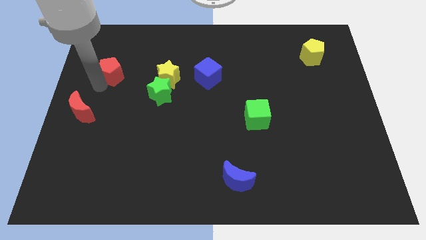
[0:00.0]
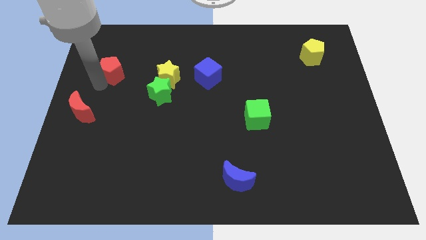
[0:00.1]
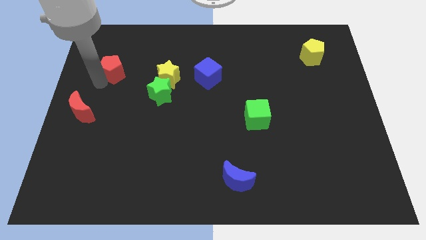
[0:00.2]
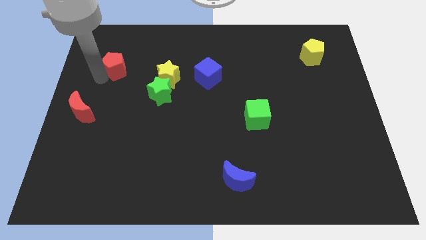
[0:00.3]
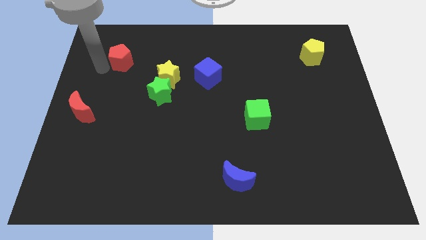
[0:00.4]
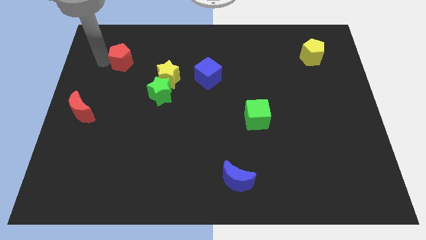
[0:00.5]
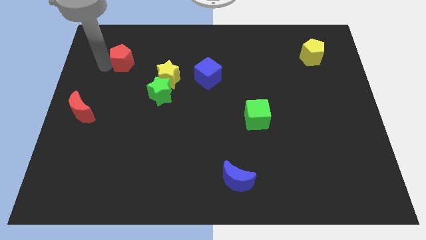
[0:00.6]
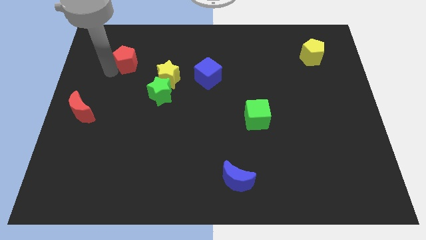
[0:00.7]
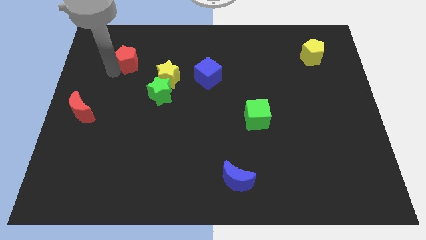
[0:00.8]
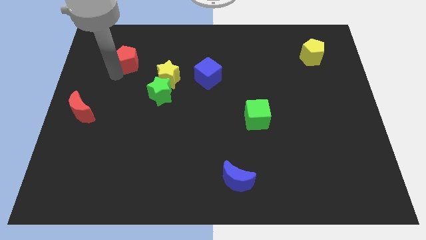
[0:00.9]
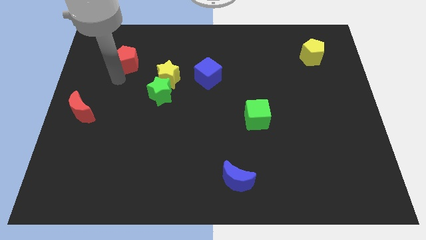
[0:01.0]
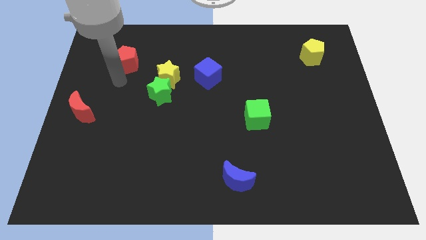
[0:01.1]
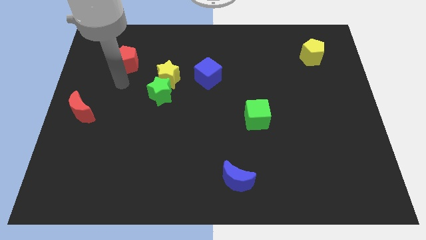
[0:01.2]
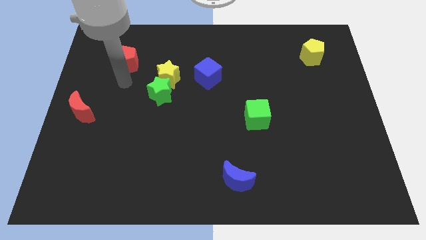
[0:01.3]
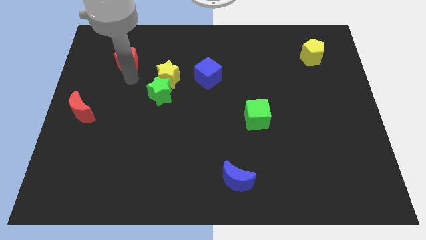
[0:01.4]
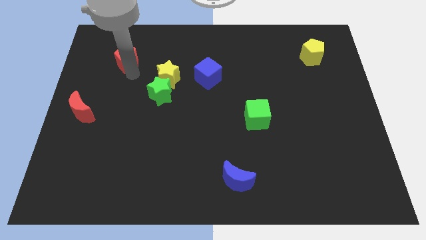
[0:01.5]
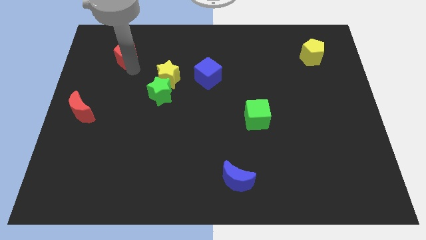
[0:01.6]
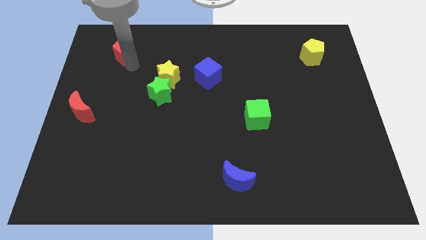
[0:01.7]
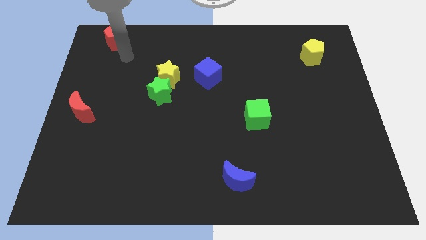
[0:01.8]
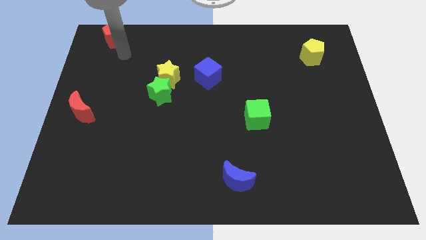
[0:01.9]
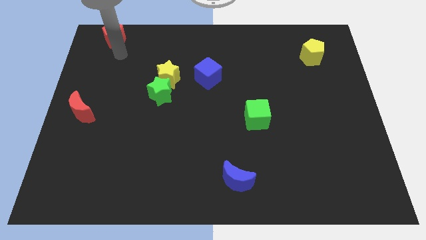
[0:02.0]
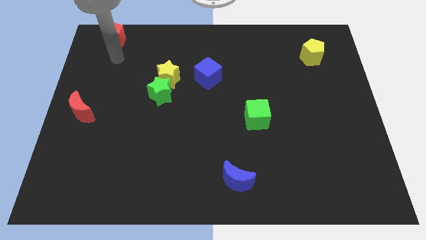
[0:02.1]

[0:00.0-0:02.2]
move the red pentagon to the top left of the board

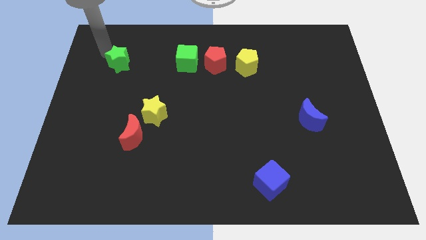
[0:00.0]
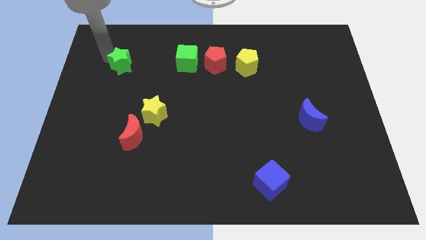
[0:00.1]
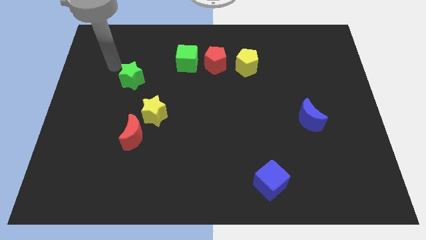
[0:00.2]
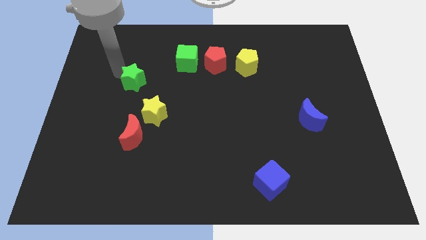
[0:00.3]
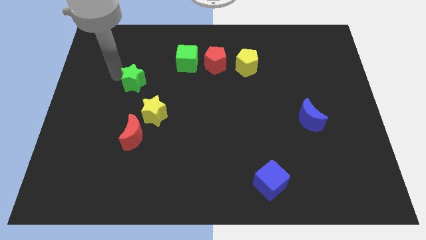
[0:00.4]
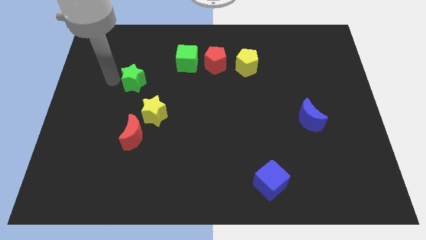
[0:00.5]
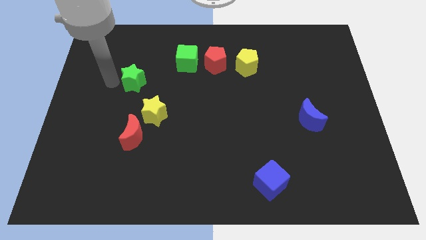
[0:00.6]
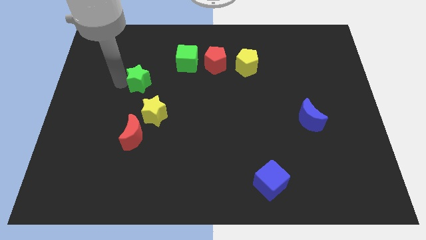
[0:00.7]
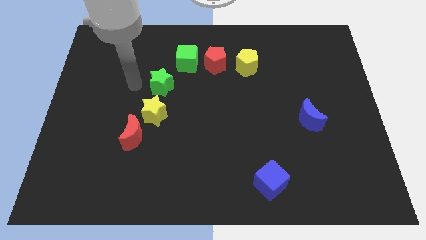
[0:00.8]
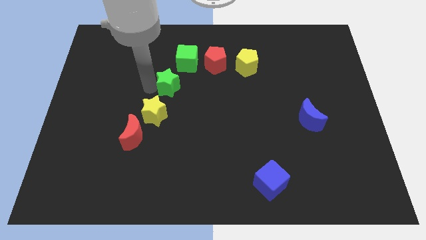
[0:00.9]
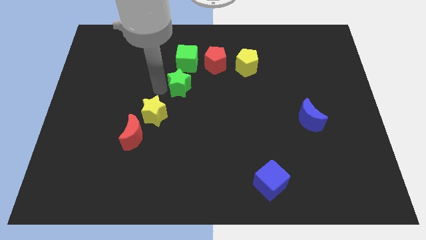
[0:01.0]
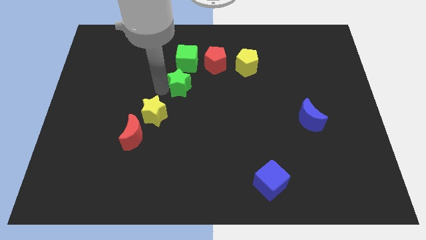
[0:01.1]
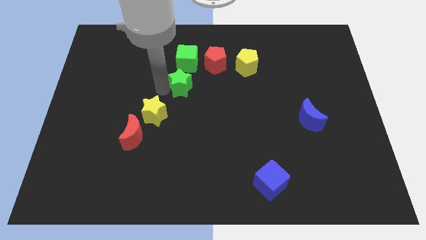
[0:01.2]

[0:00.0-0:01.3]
push the green star to the bottom of the green cube

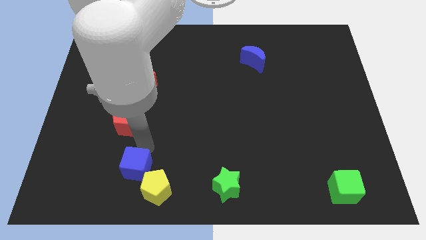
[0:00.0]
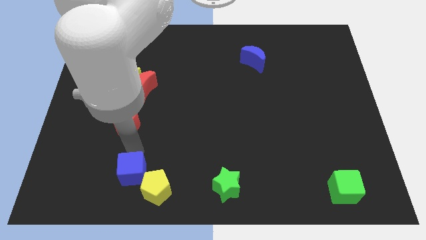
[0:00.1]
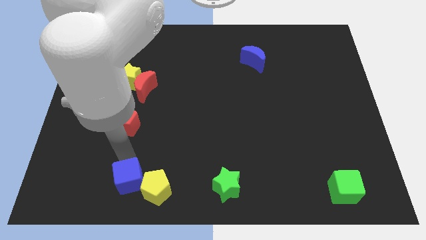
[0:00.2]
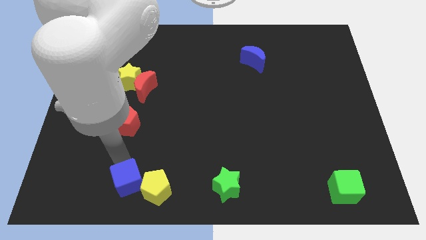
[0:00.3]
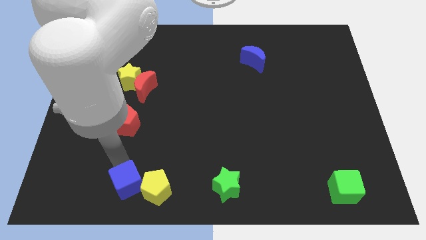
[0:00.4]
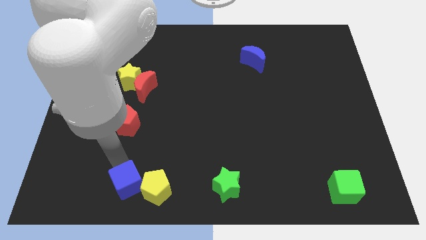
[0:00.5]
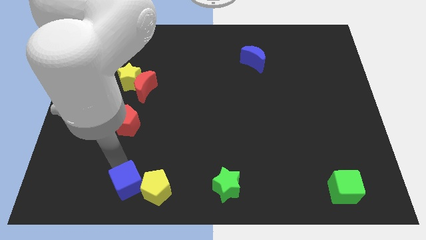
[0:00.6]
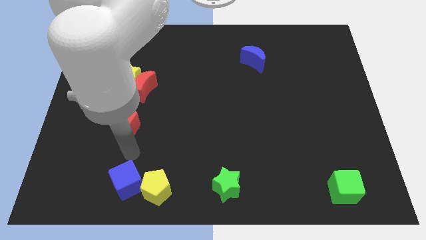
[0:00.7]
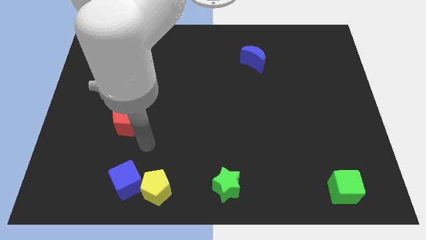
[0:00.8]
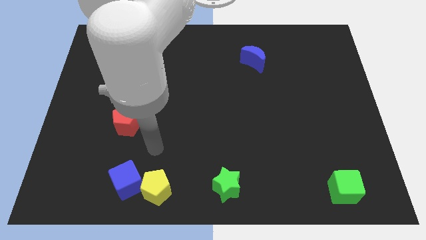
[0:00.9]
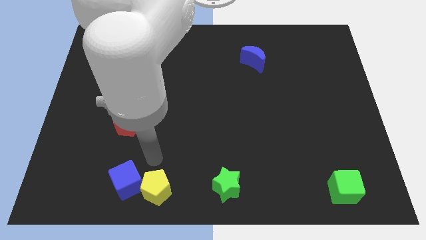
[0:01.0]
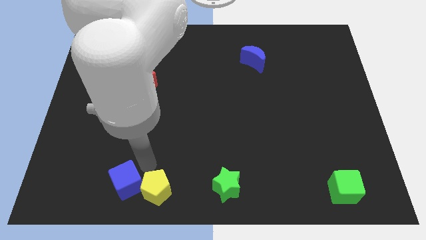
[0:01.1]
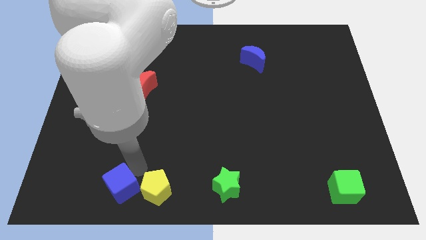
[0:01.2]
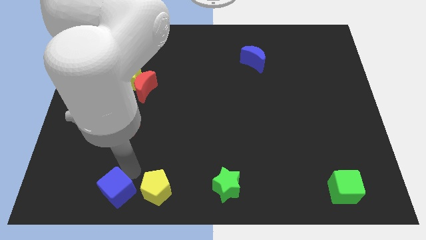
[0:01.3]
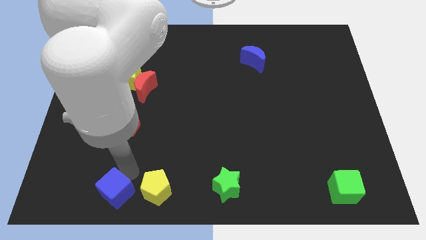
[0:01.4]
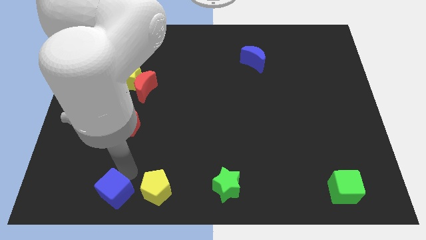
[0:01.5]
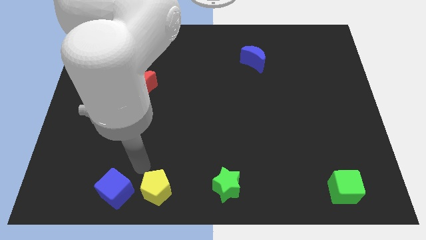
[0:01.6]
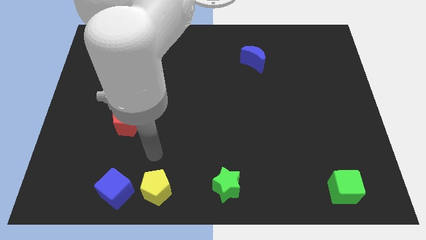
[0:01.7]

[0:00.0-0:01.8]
push blue cube at the bottom

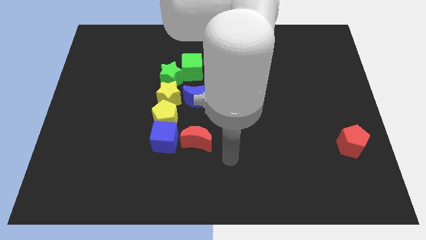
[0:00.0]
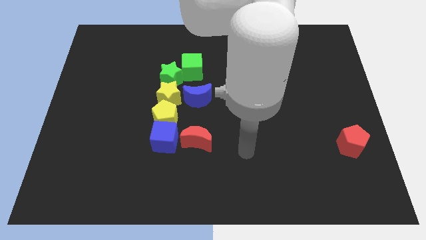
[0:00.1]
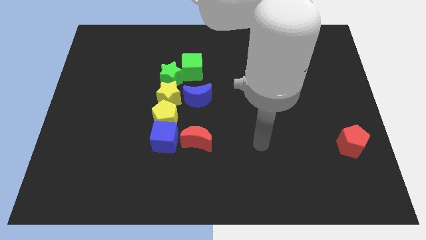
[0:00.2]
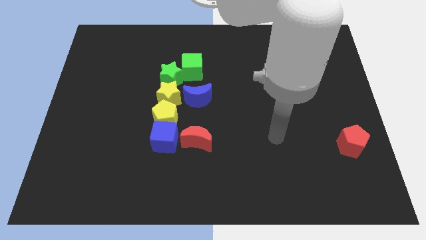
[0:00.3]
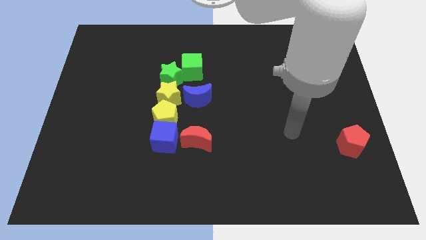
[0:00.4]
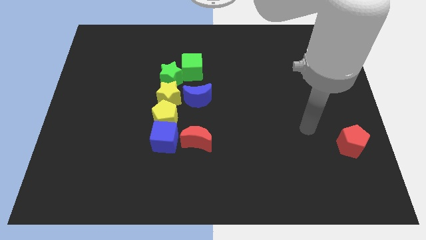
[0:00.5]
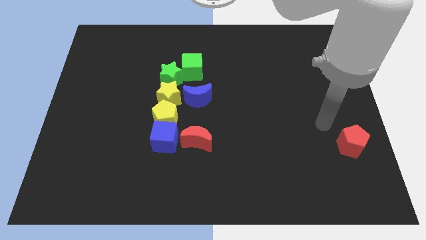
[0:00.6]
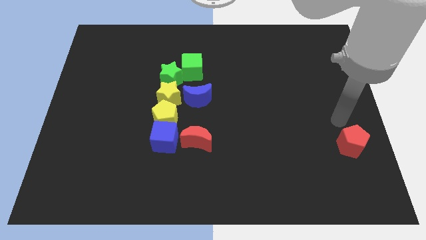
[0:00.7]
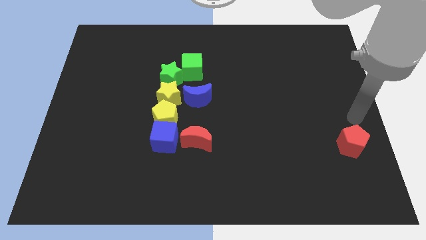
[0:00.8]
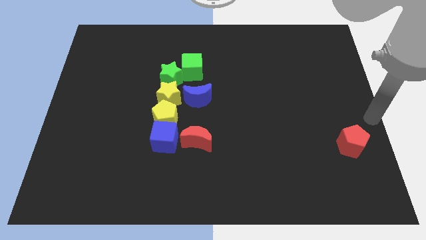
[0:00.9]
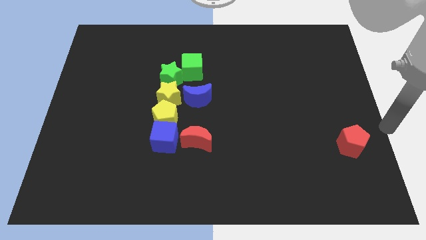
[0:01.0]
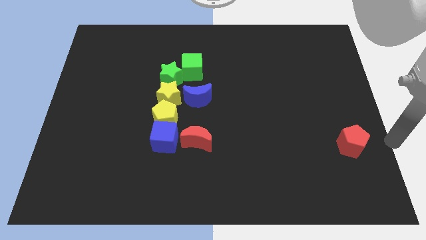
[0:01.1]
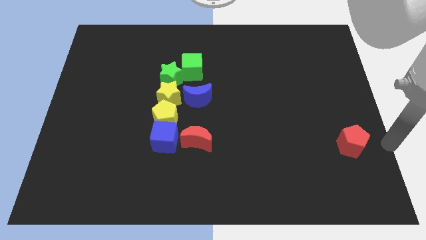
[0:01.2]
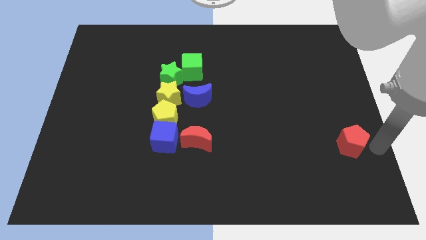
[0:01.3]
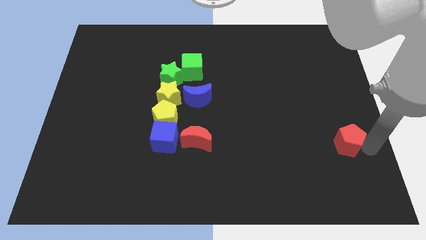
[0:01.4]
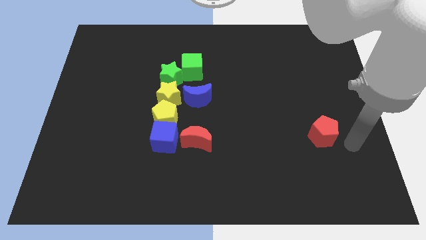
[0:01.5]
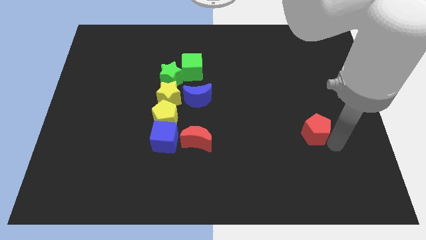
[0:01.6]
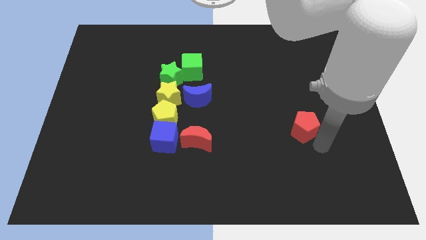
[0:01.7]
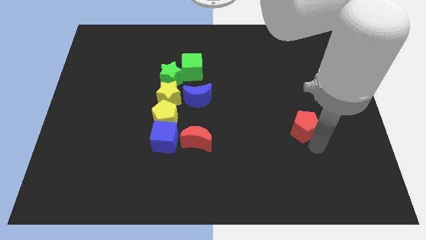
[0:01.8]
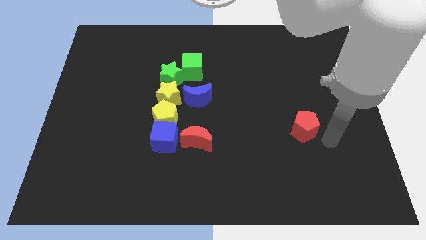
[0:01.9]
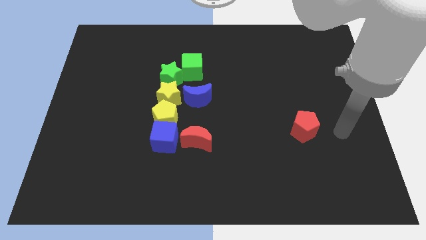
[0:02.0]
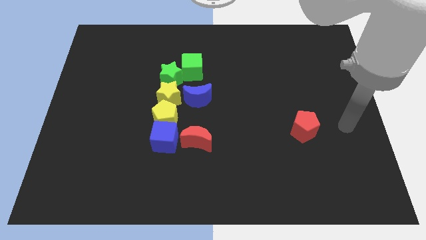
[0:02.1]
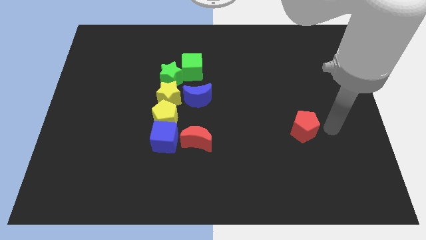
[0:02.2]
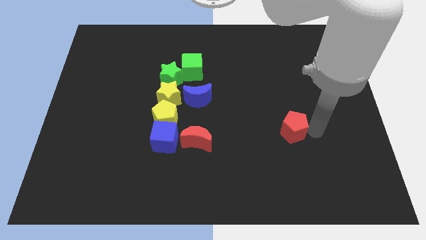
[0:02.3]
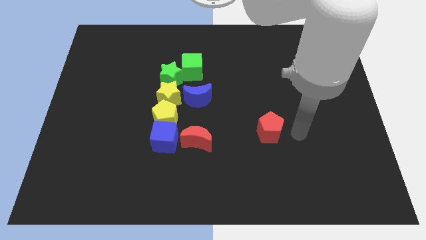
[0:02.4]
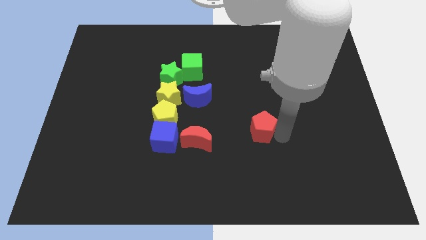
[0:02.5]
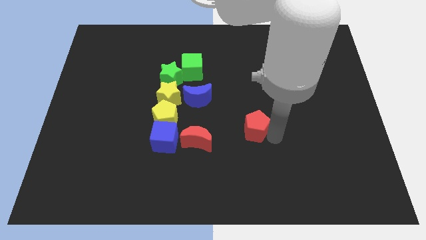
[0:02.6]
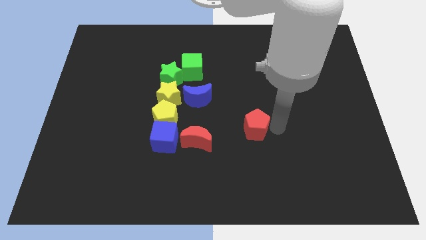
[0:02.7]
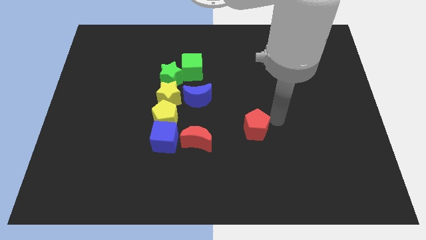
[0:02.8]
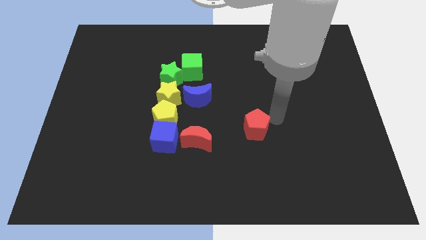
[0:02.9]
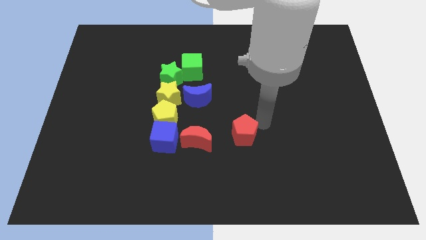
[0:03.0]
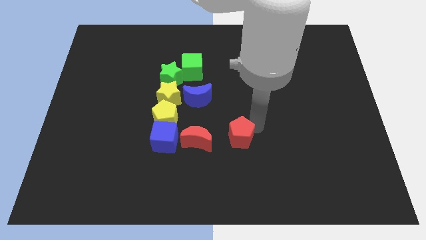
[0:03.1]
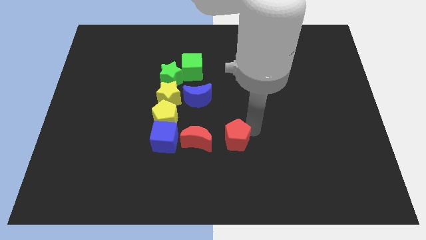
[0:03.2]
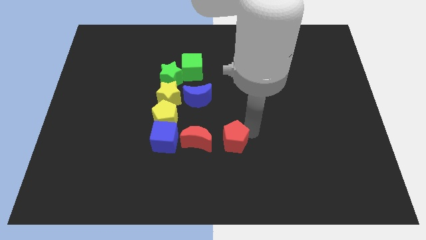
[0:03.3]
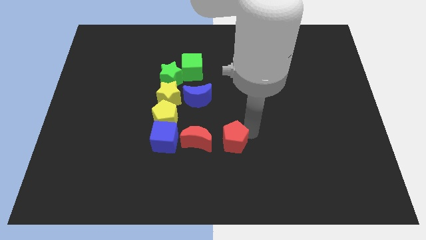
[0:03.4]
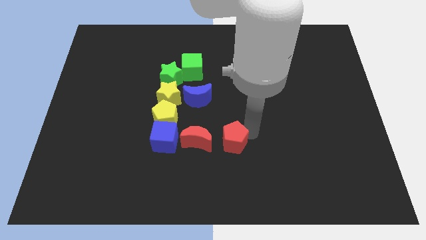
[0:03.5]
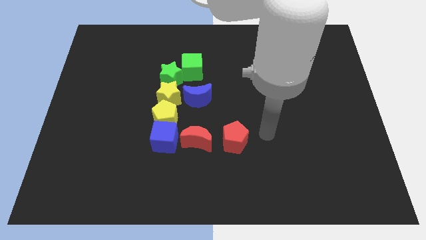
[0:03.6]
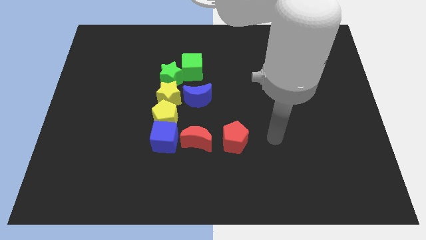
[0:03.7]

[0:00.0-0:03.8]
place the red pentagon right to the red moon
